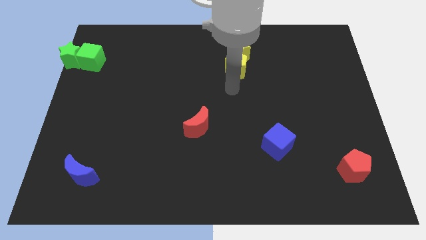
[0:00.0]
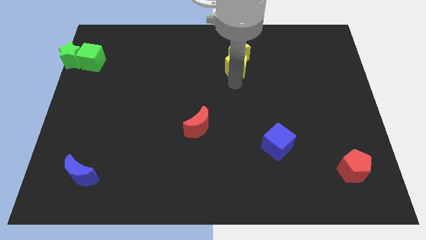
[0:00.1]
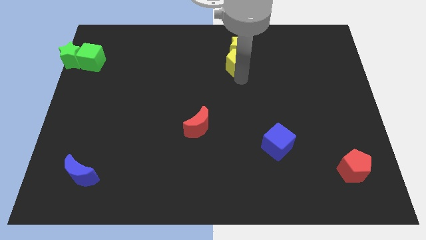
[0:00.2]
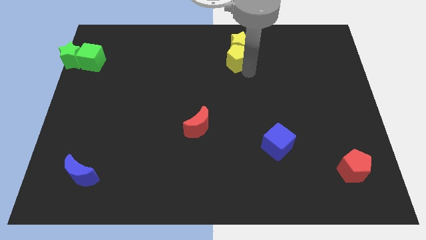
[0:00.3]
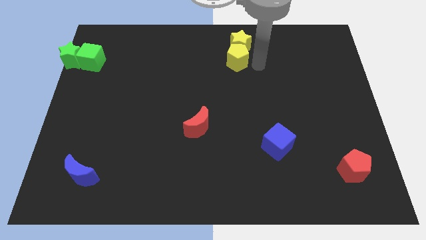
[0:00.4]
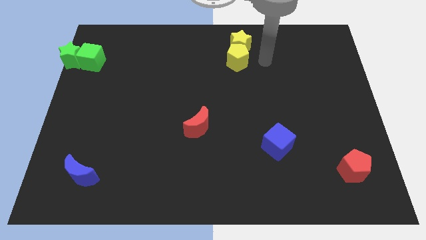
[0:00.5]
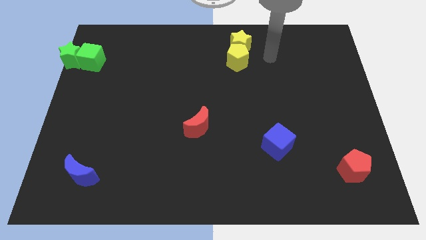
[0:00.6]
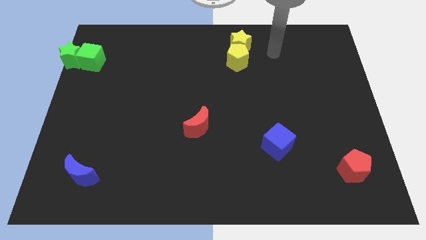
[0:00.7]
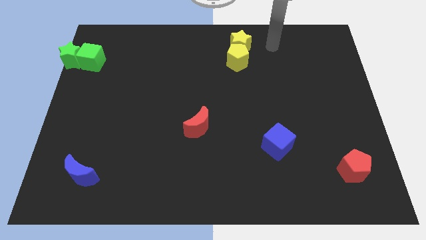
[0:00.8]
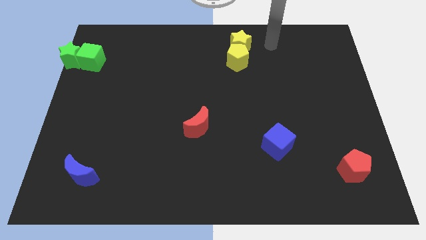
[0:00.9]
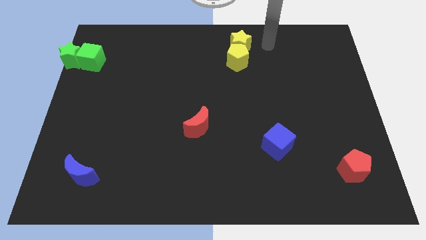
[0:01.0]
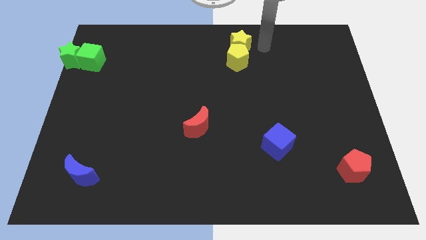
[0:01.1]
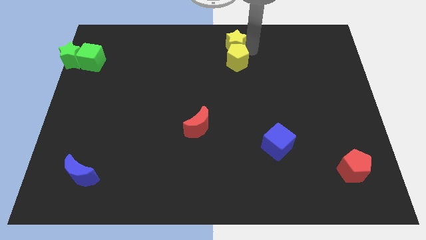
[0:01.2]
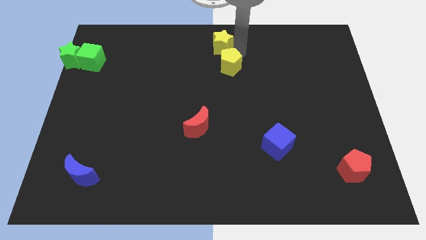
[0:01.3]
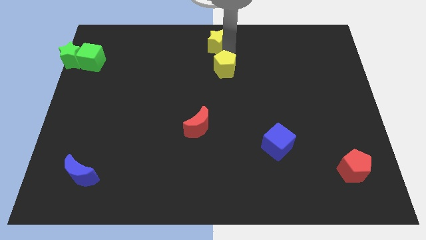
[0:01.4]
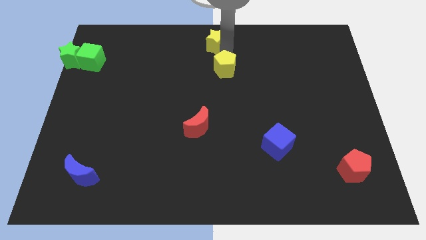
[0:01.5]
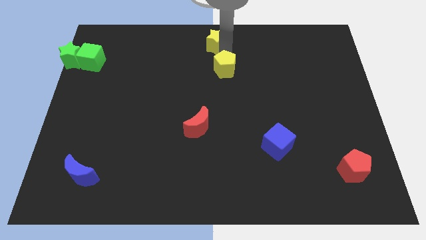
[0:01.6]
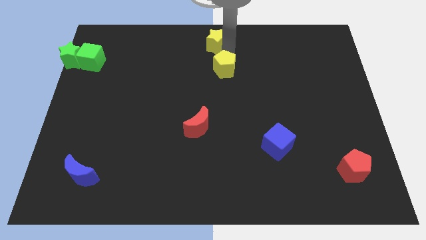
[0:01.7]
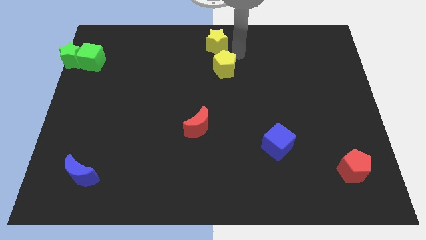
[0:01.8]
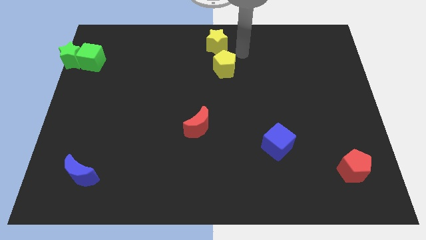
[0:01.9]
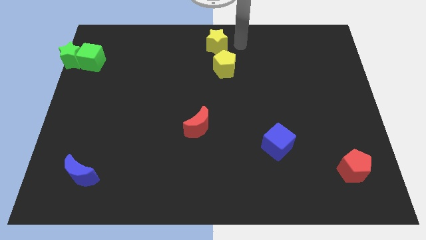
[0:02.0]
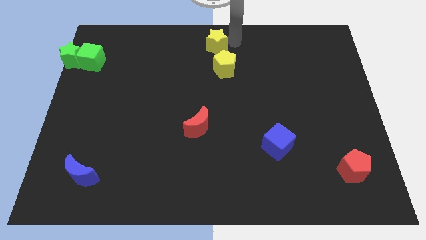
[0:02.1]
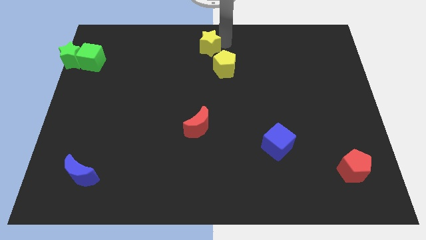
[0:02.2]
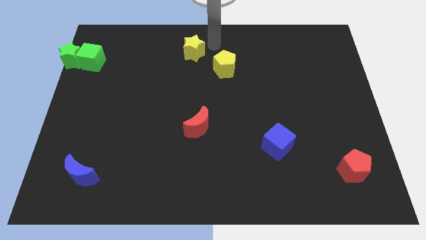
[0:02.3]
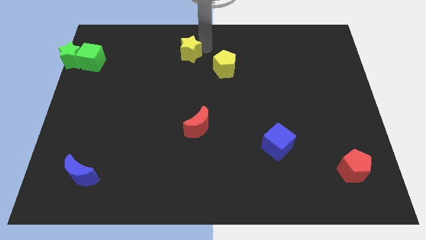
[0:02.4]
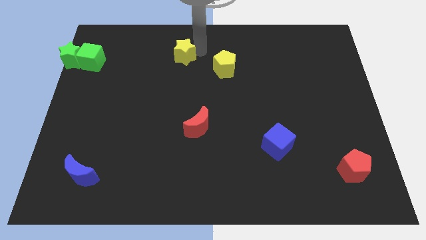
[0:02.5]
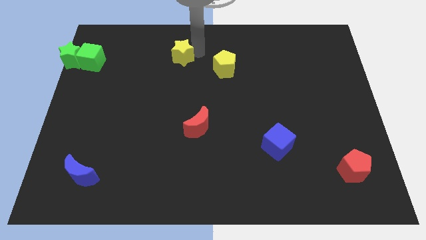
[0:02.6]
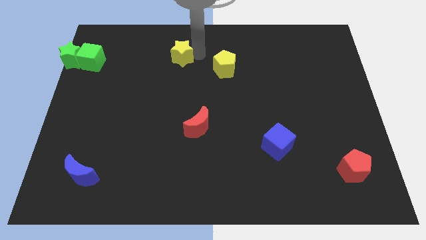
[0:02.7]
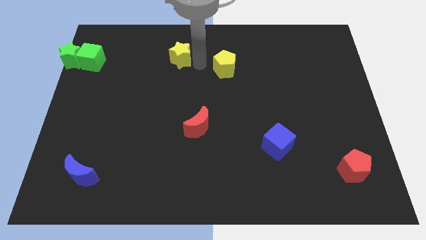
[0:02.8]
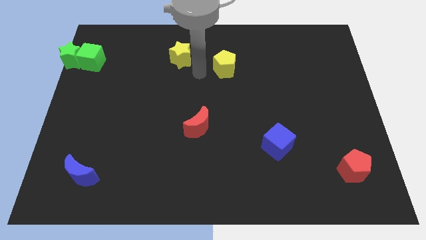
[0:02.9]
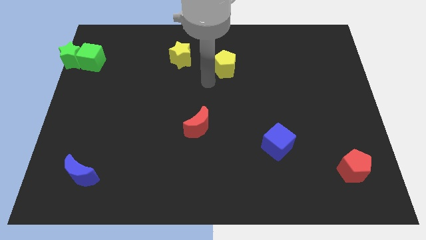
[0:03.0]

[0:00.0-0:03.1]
separate yellow star and the yellow pentagon

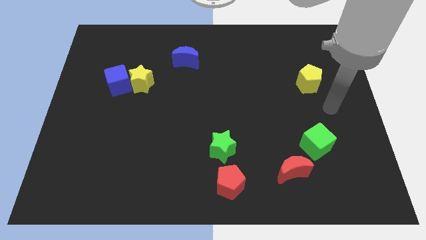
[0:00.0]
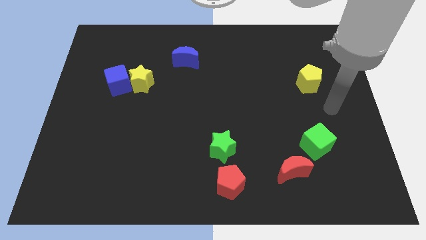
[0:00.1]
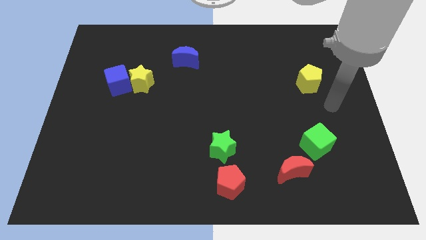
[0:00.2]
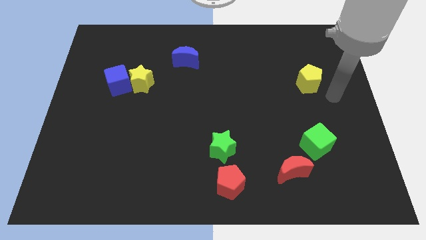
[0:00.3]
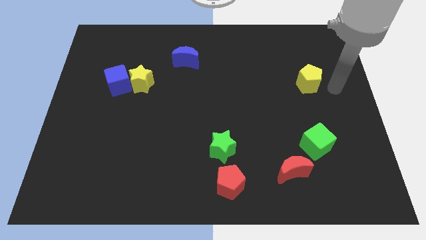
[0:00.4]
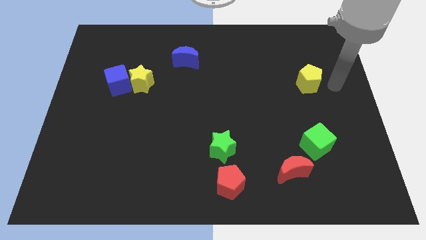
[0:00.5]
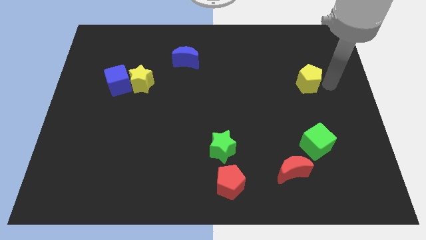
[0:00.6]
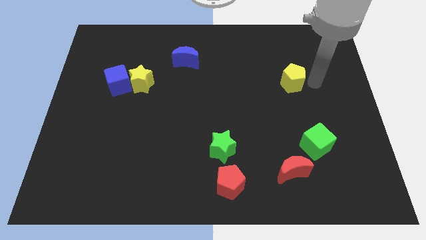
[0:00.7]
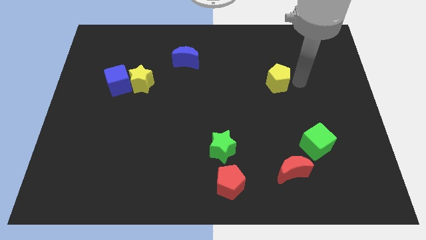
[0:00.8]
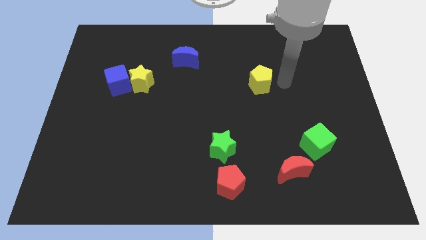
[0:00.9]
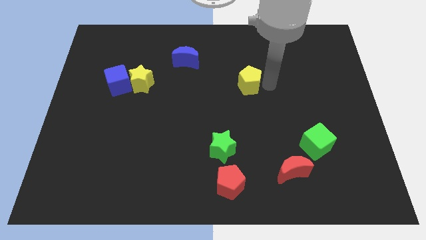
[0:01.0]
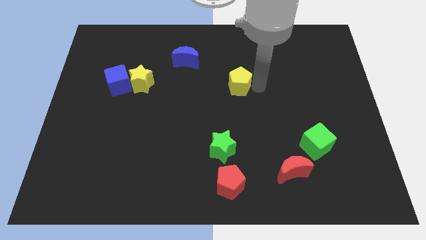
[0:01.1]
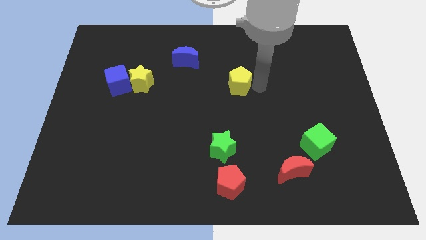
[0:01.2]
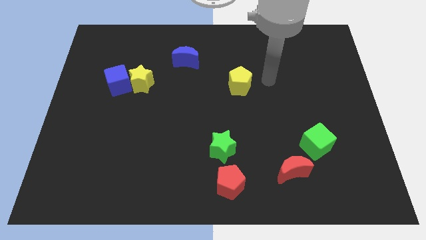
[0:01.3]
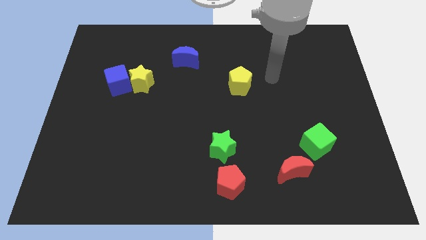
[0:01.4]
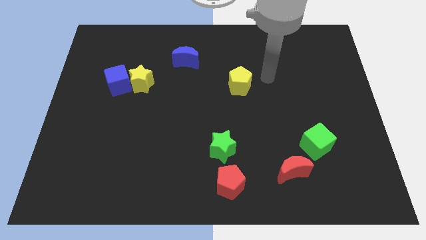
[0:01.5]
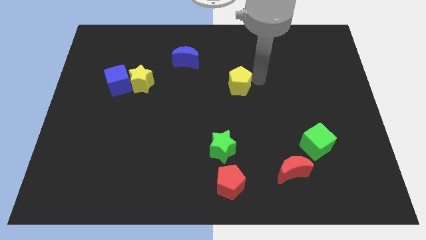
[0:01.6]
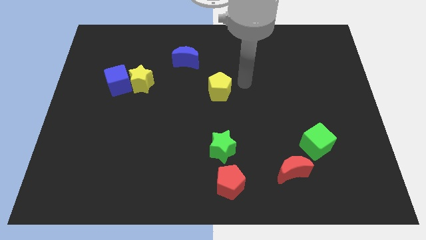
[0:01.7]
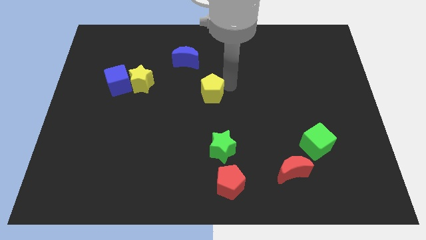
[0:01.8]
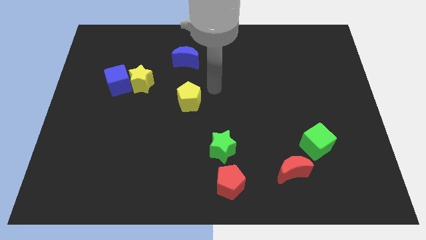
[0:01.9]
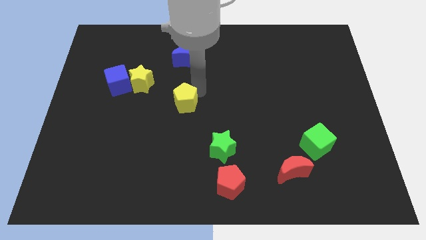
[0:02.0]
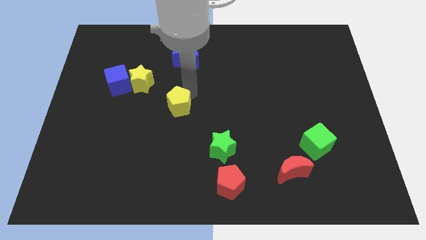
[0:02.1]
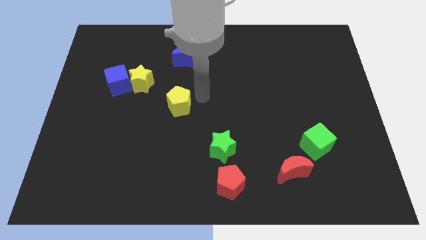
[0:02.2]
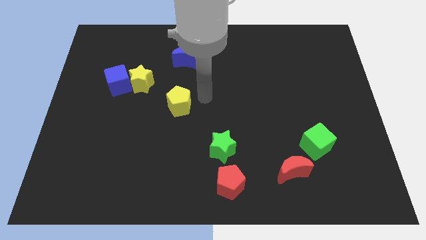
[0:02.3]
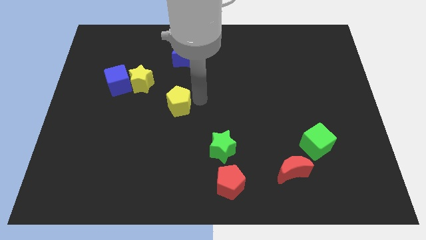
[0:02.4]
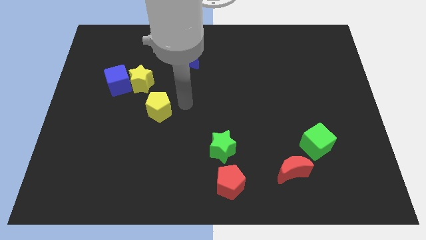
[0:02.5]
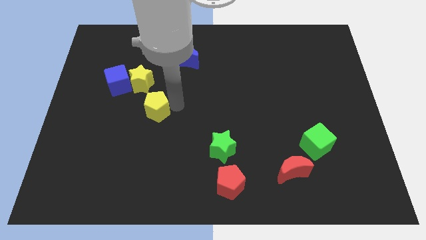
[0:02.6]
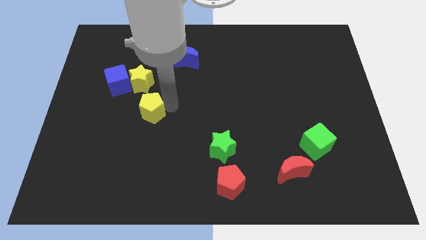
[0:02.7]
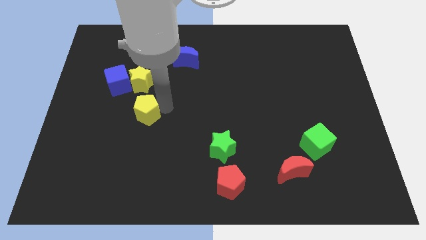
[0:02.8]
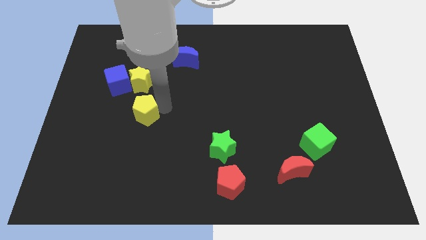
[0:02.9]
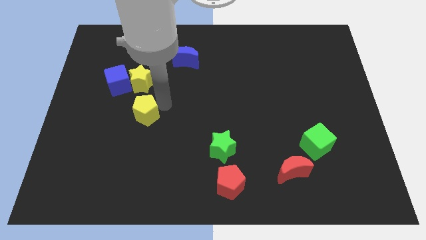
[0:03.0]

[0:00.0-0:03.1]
move the yellow pentagon to the bottom of the yellow star

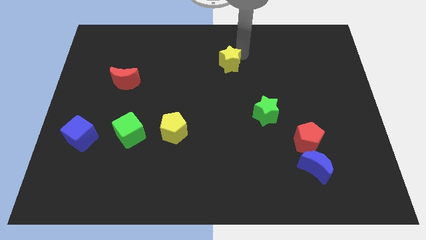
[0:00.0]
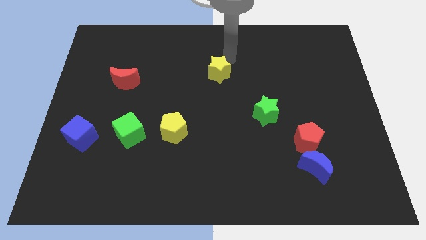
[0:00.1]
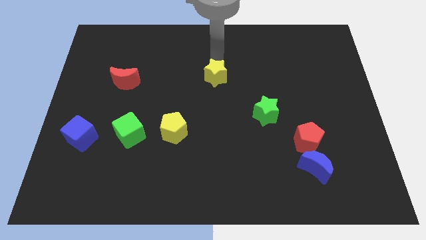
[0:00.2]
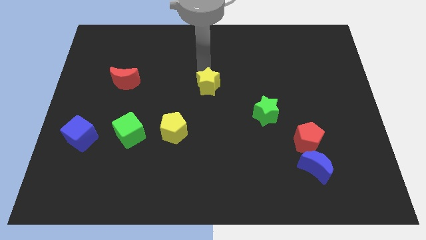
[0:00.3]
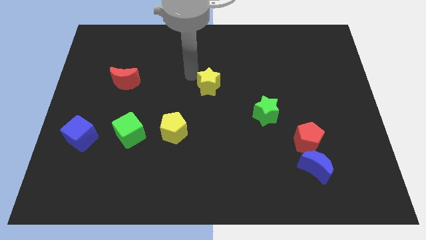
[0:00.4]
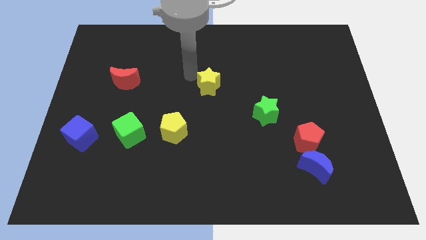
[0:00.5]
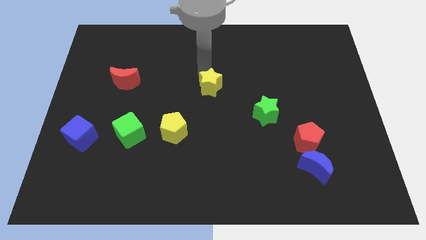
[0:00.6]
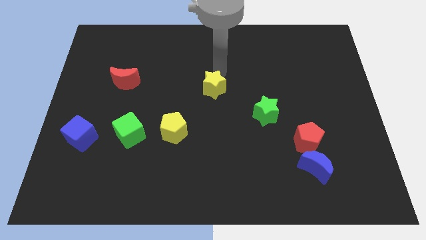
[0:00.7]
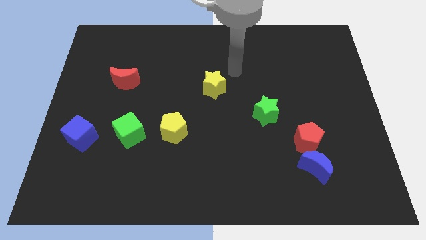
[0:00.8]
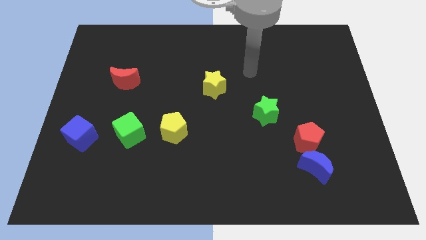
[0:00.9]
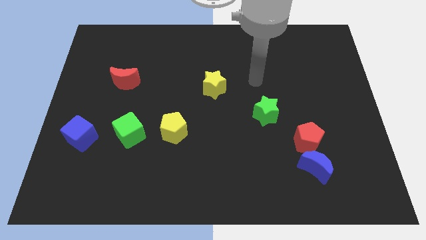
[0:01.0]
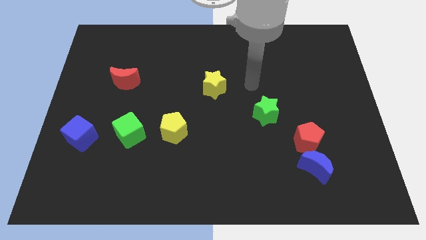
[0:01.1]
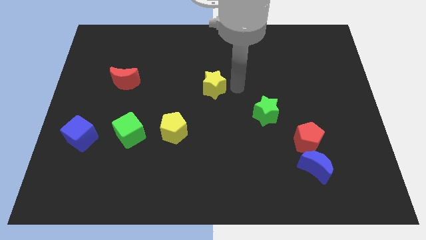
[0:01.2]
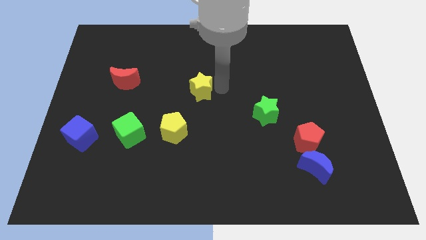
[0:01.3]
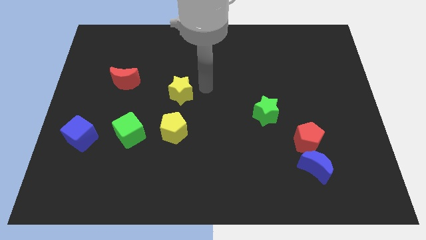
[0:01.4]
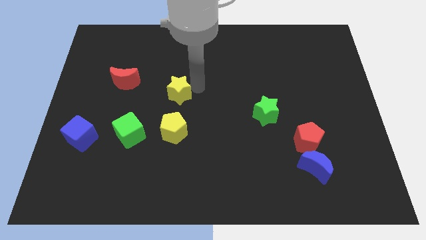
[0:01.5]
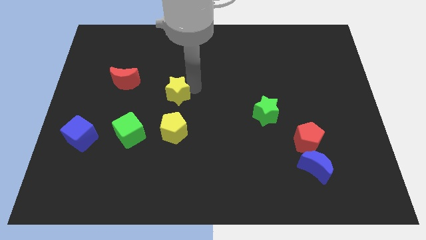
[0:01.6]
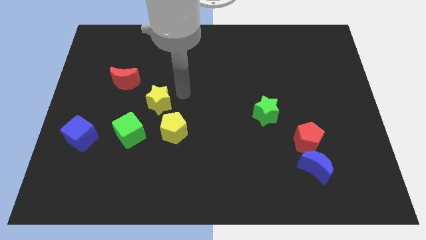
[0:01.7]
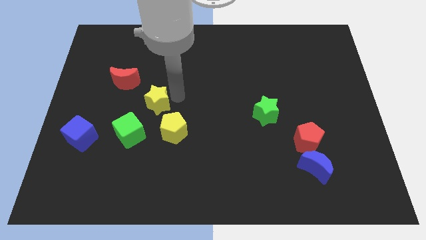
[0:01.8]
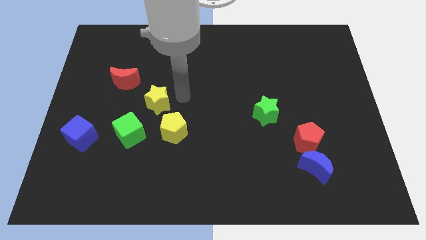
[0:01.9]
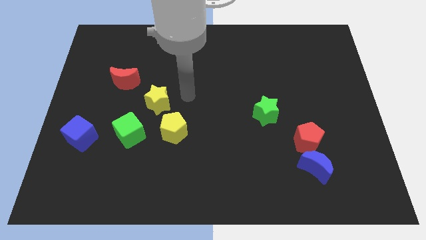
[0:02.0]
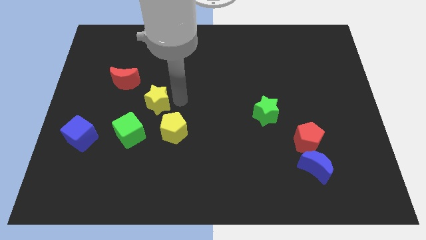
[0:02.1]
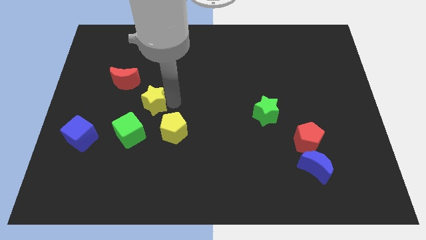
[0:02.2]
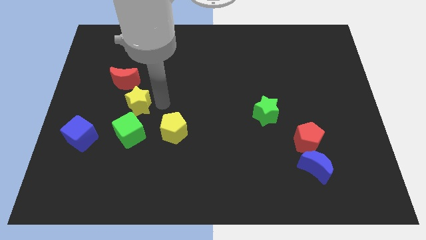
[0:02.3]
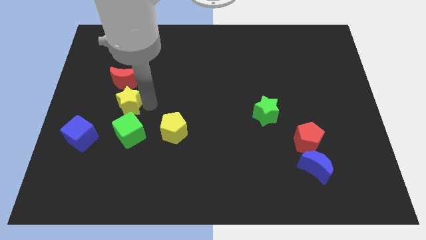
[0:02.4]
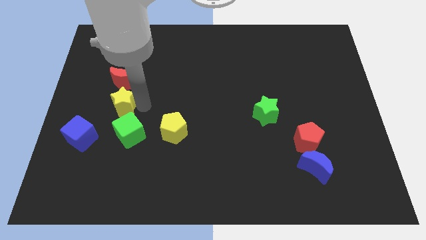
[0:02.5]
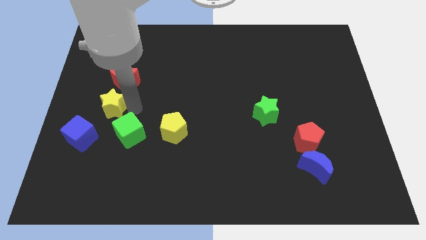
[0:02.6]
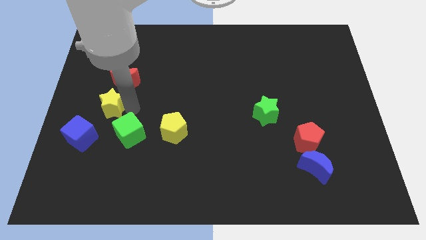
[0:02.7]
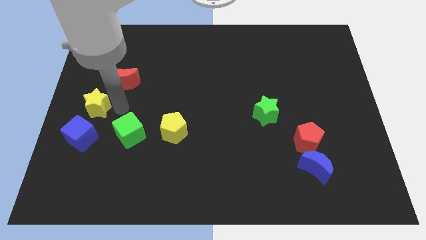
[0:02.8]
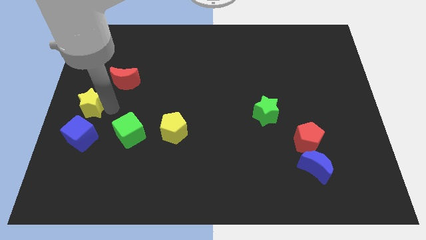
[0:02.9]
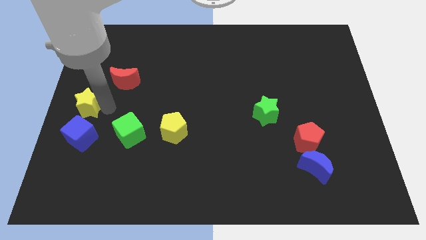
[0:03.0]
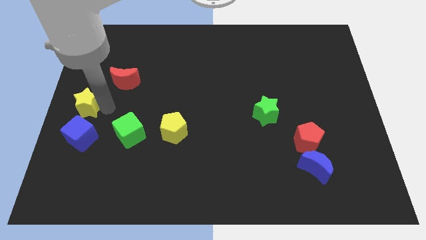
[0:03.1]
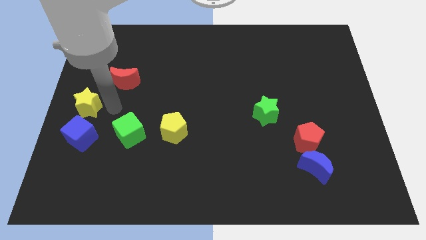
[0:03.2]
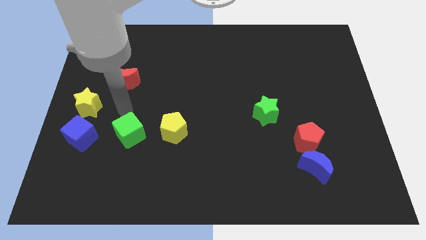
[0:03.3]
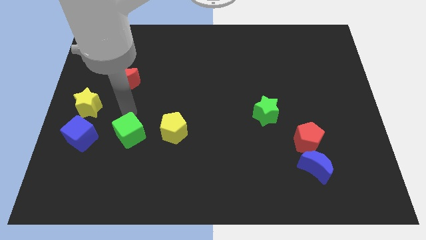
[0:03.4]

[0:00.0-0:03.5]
drag the yellow star to the top of the blue cube
